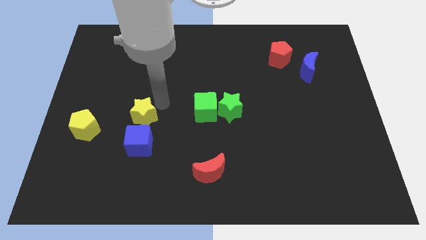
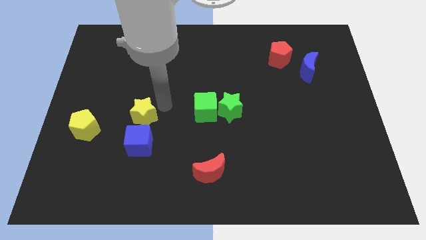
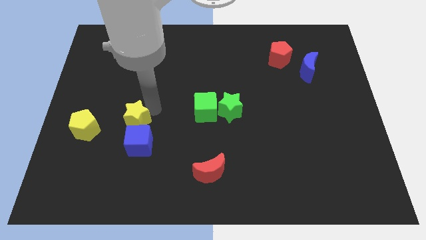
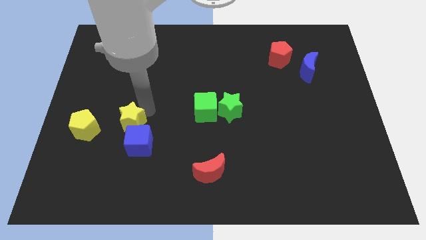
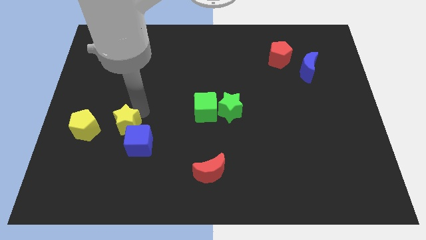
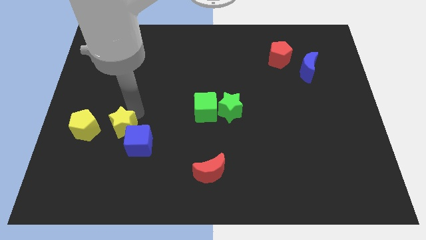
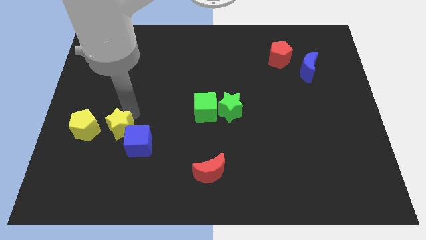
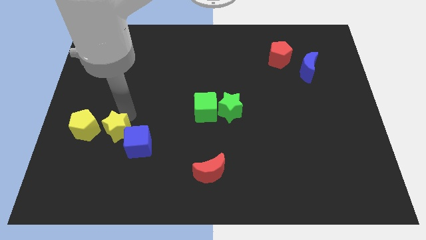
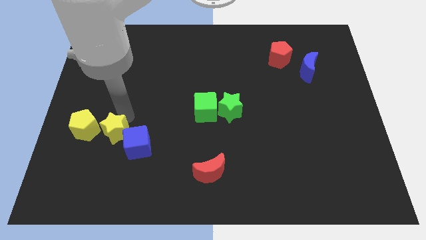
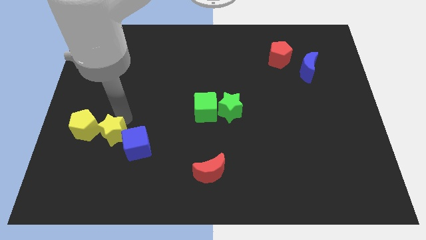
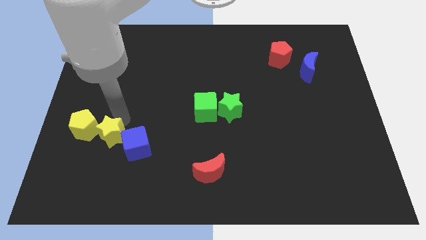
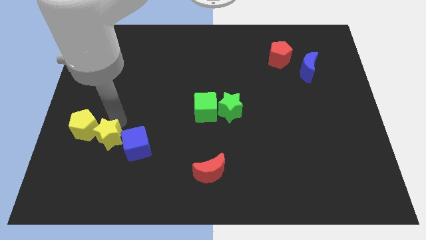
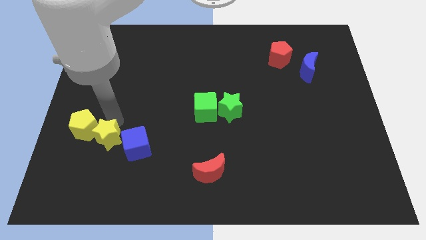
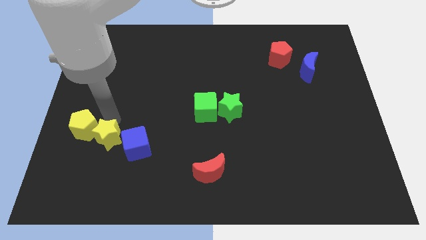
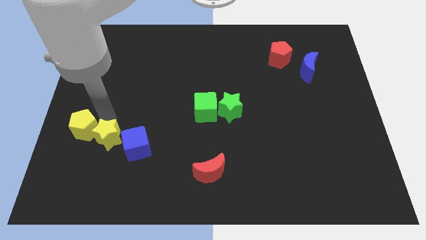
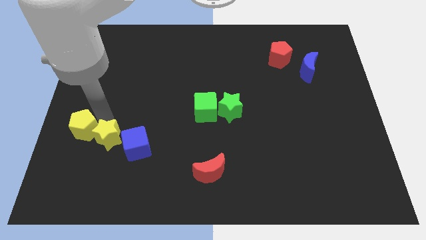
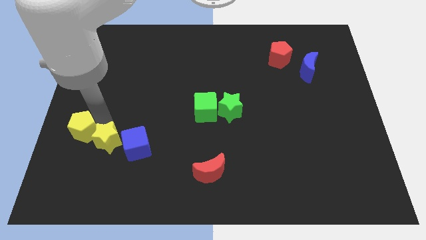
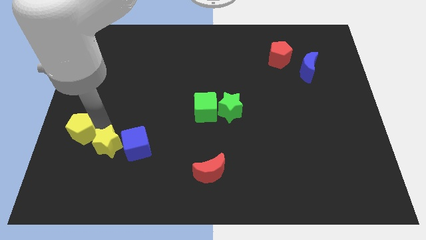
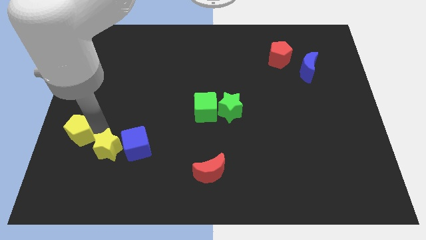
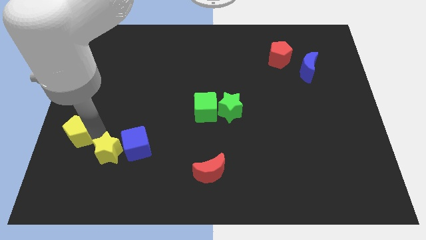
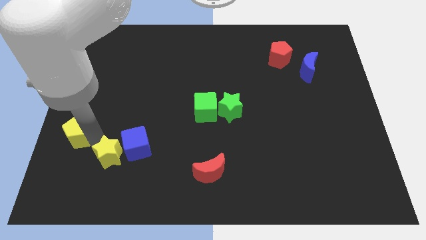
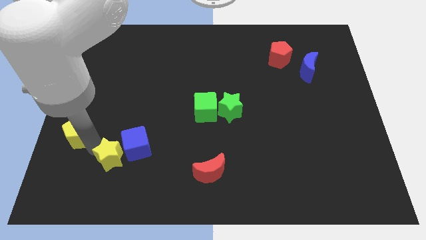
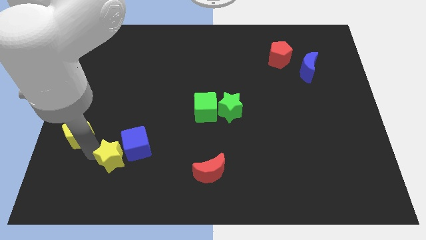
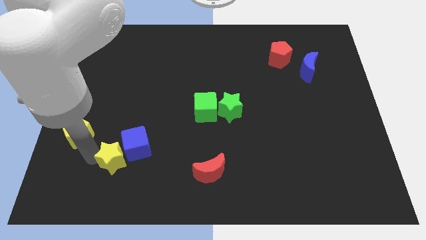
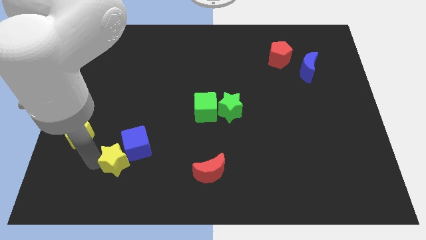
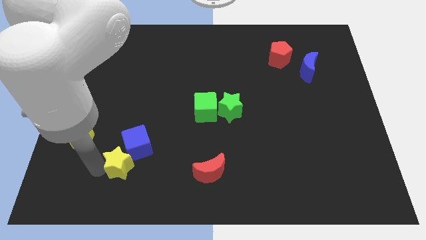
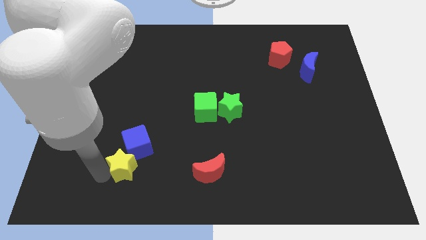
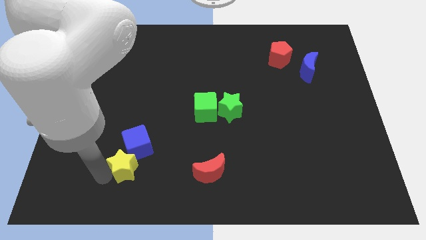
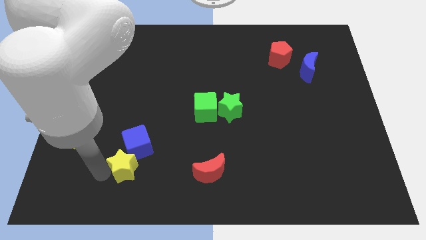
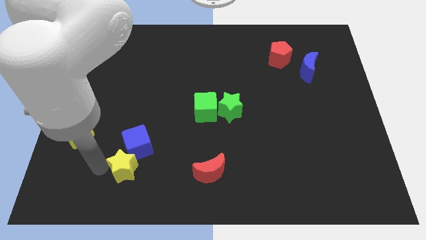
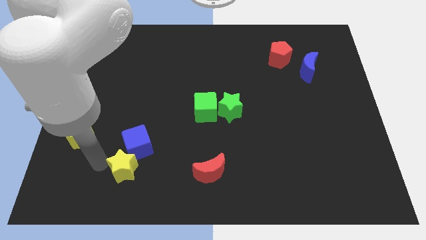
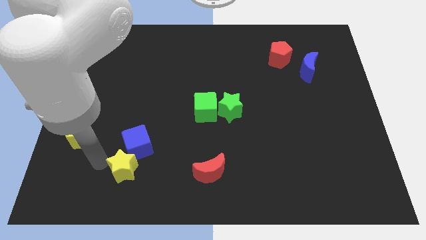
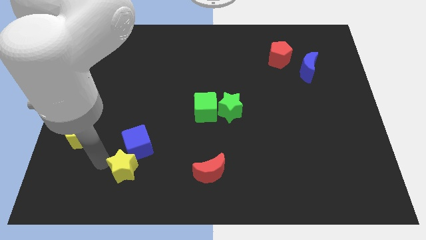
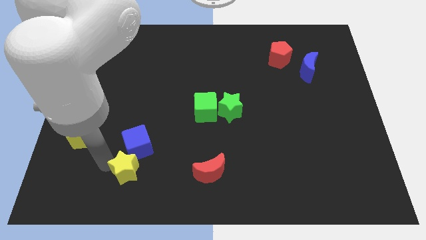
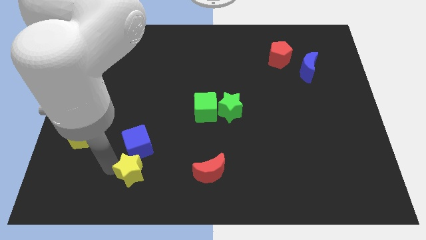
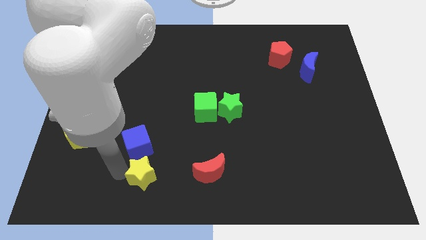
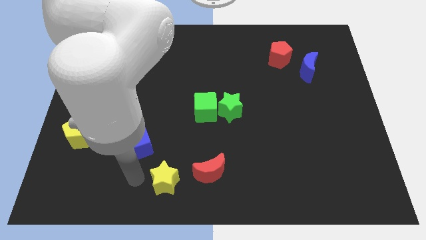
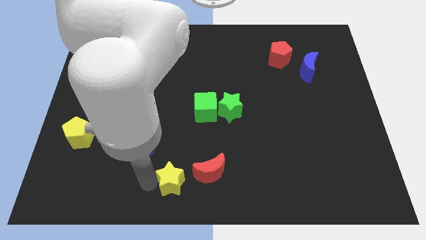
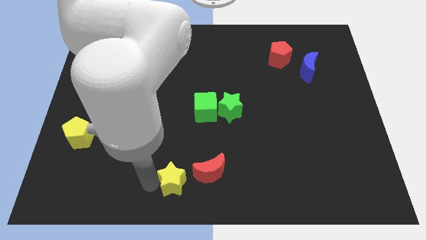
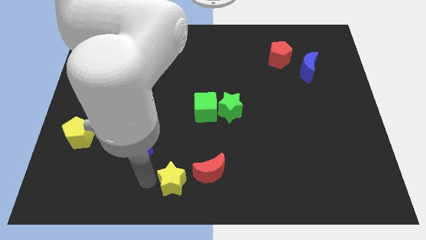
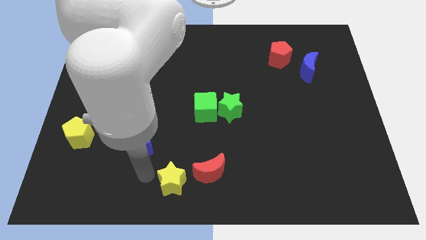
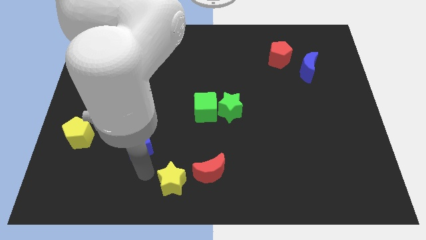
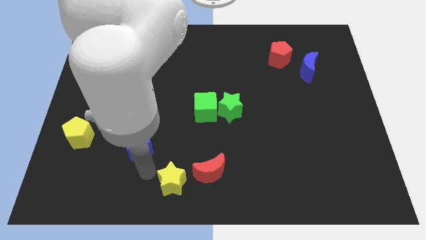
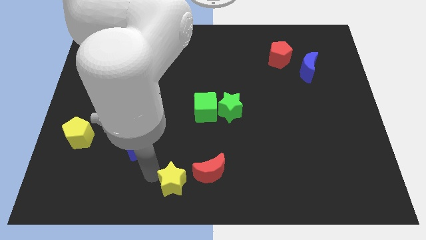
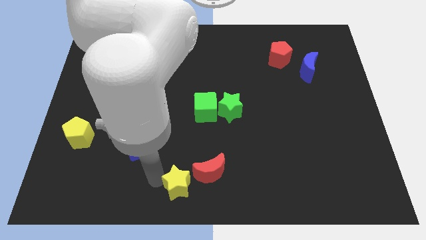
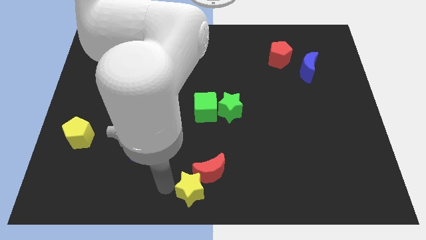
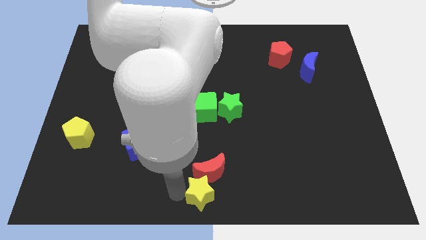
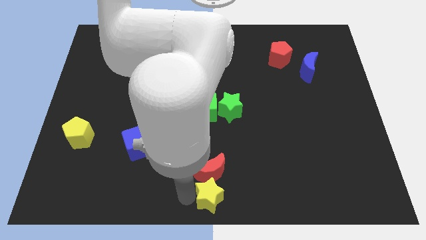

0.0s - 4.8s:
slide the yellow star to the bottom side of the red moon

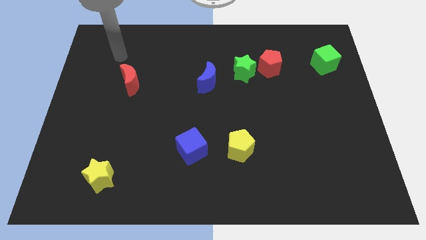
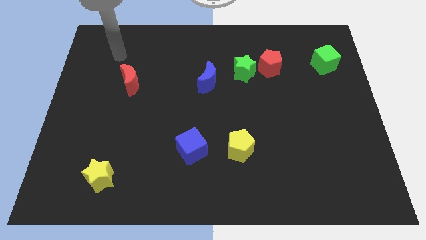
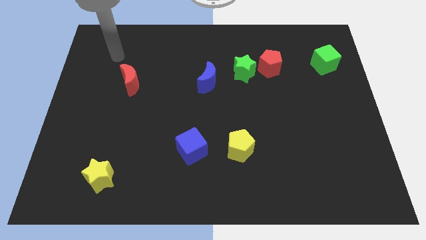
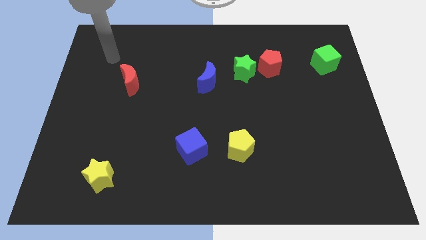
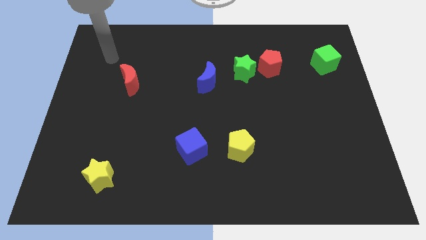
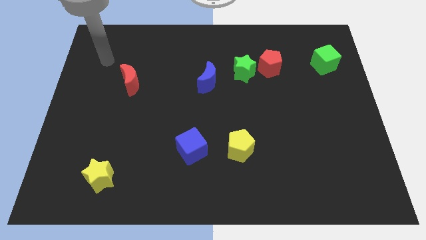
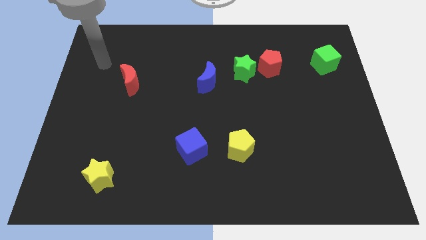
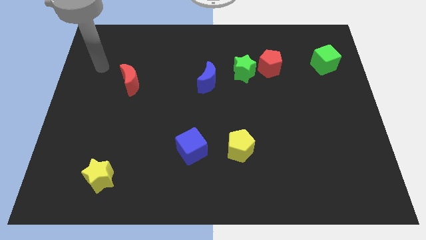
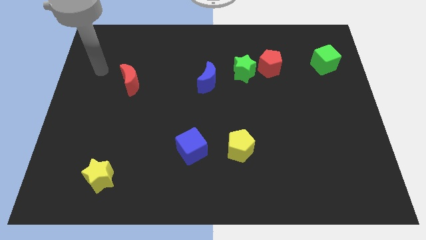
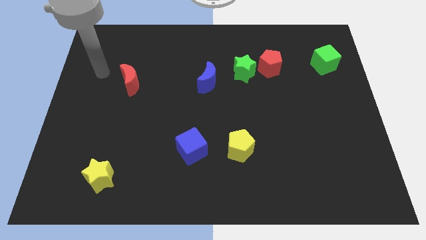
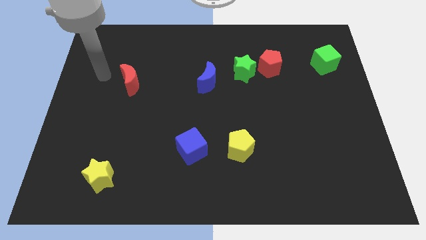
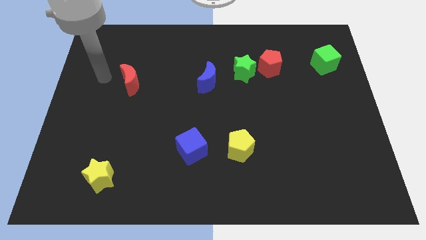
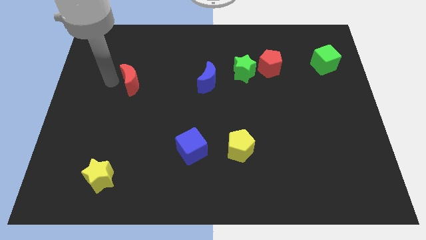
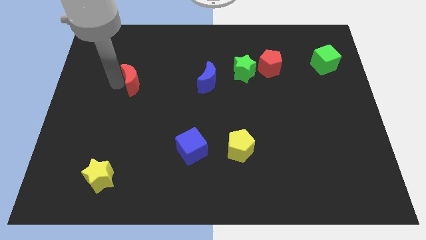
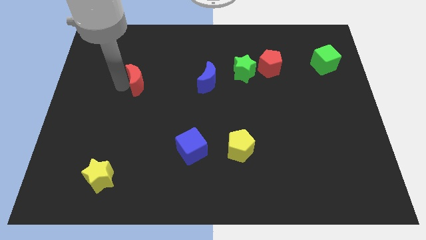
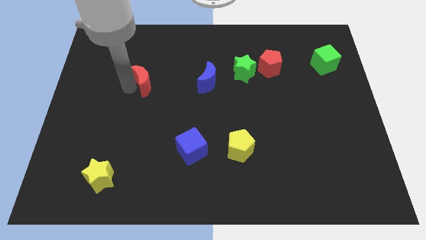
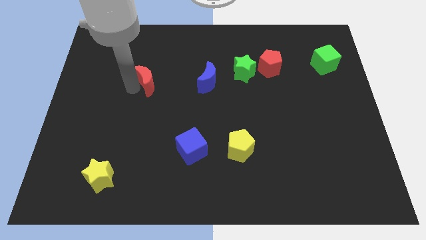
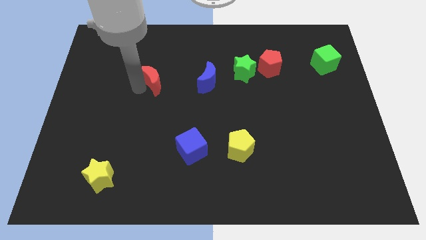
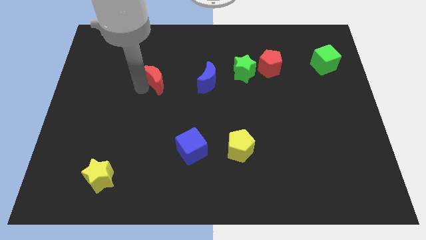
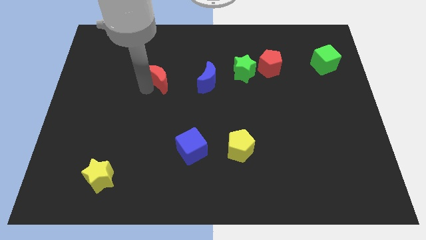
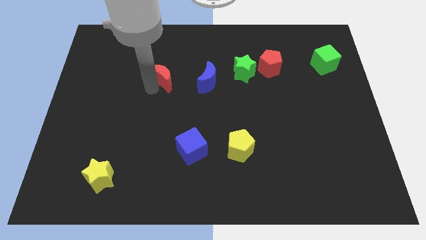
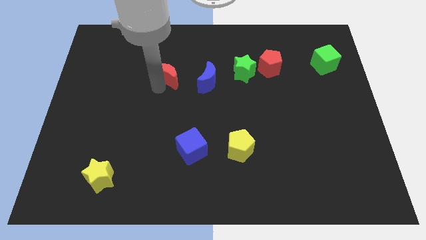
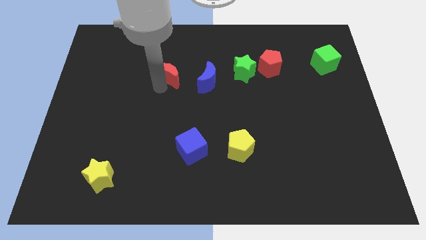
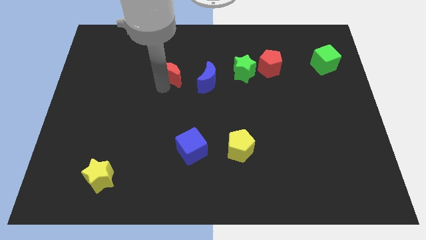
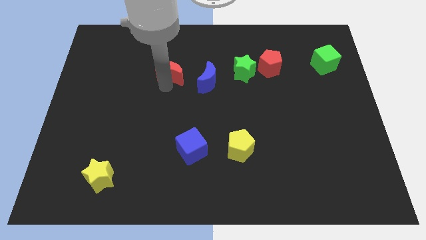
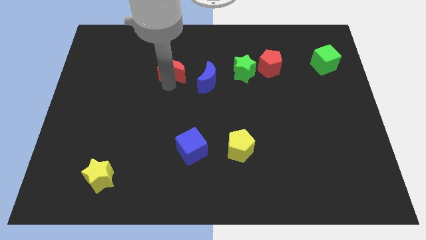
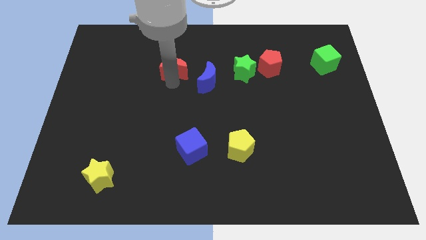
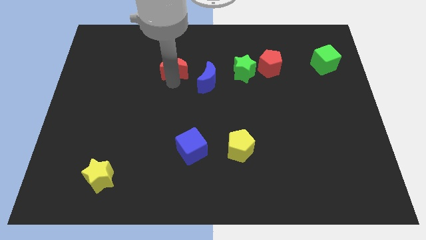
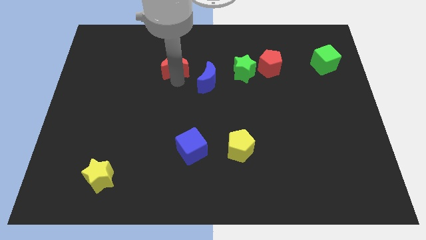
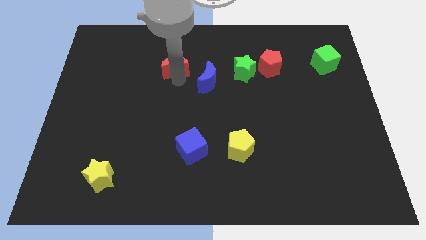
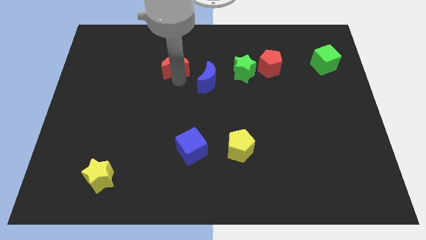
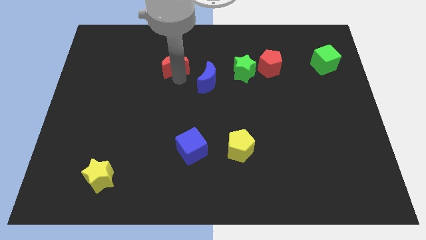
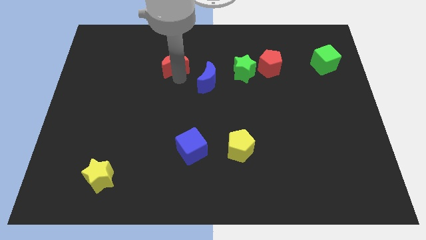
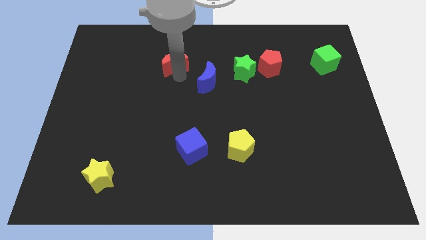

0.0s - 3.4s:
put the red moon parallel to green star

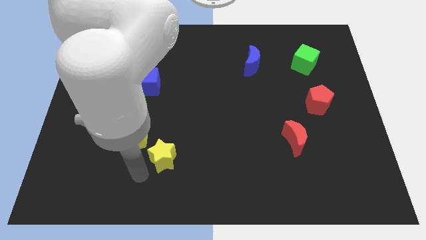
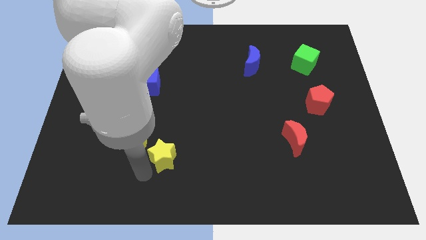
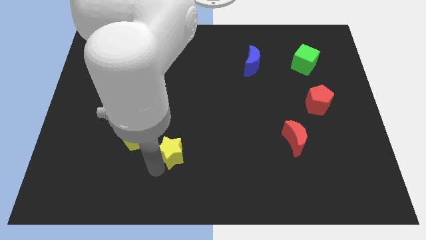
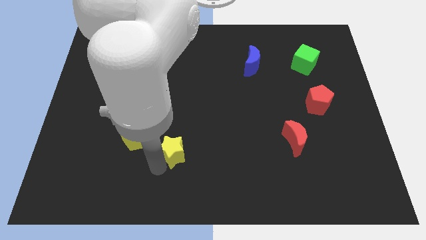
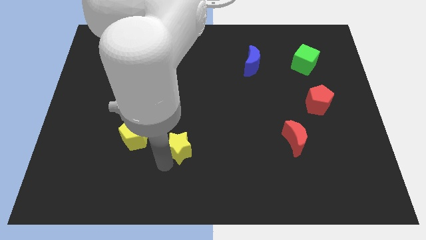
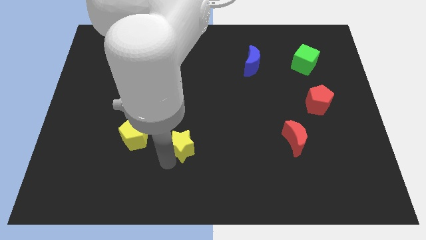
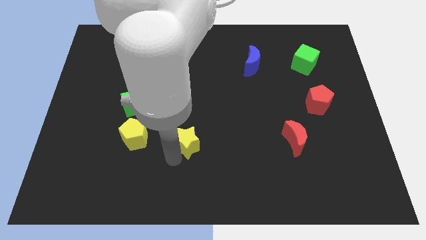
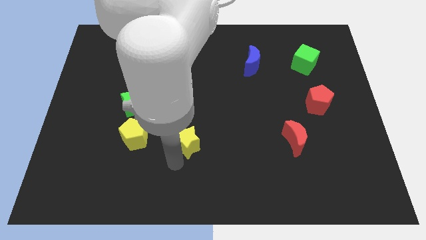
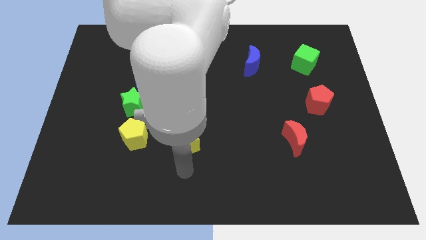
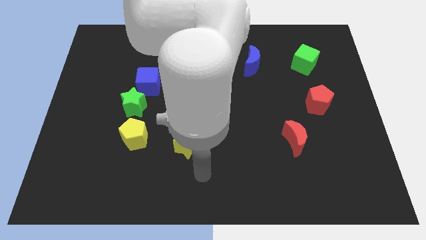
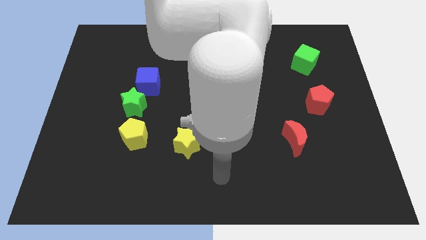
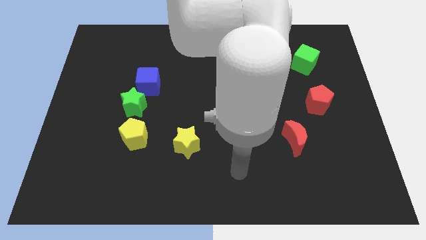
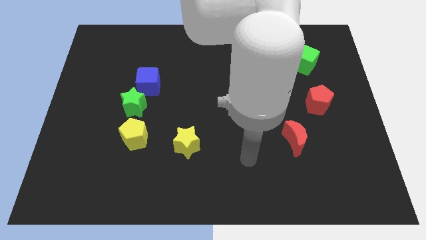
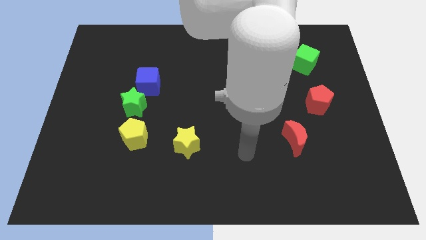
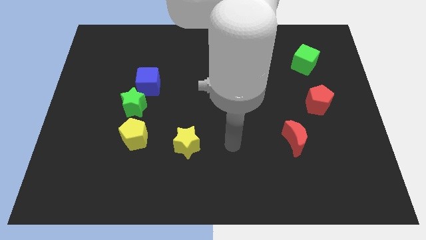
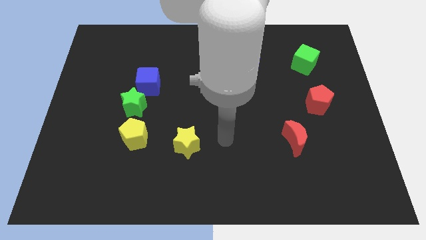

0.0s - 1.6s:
move the yellow star to the right of the yellow pentagon
